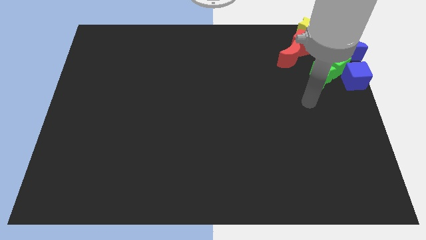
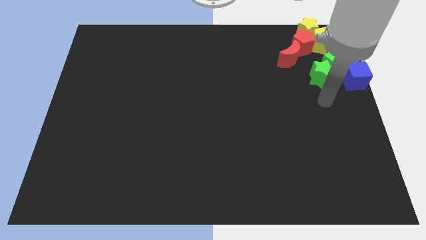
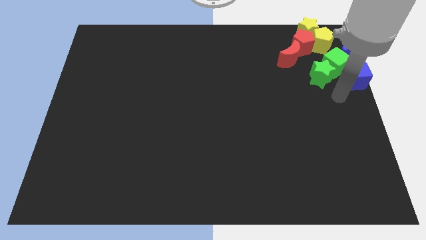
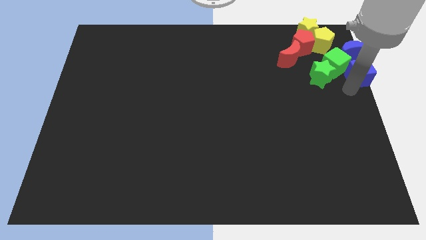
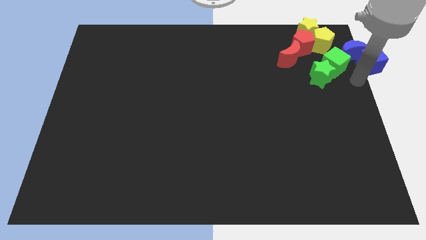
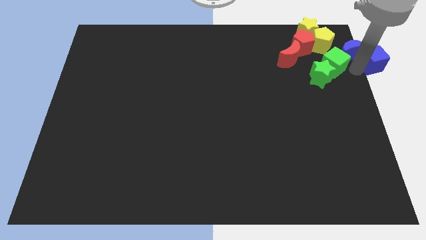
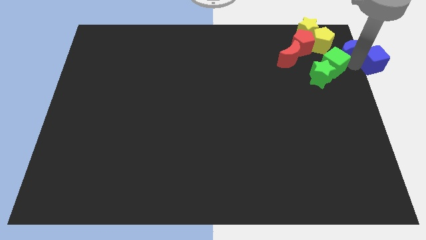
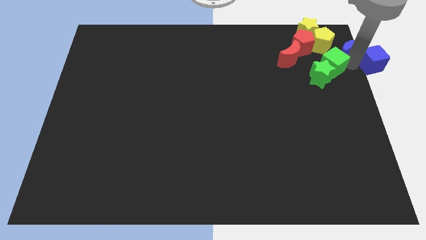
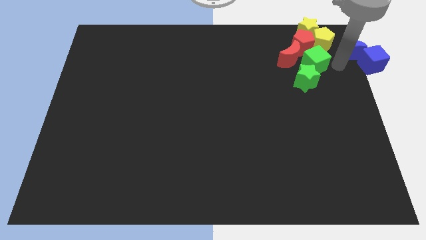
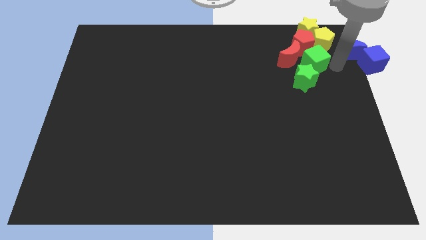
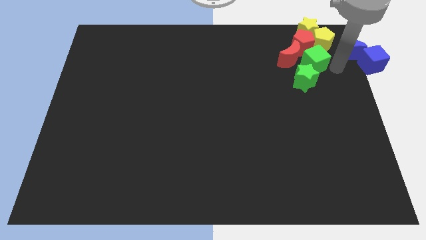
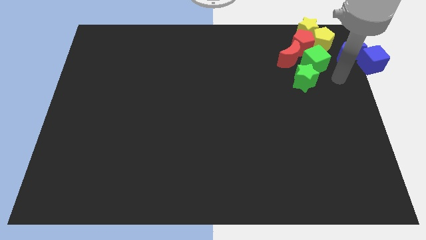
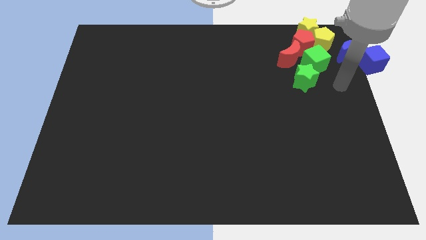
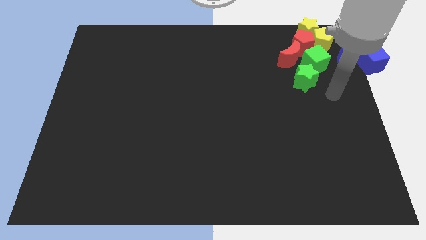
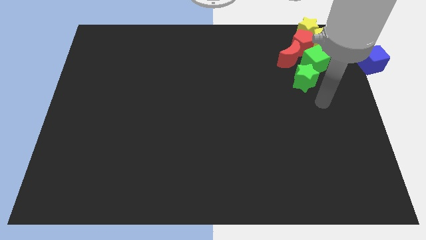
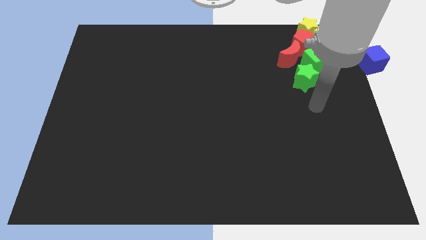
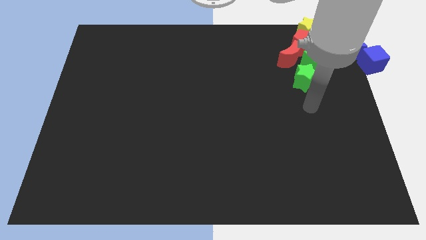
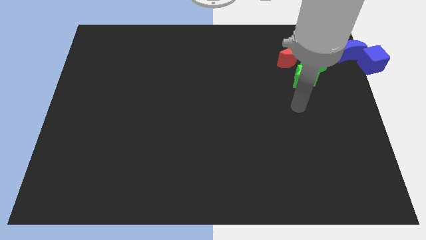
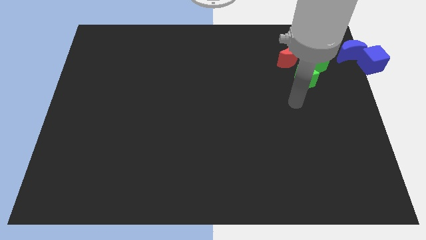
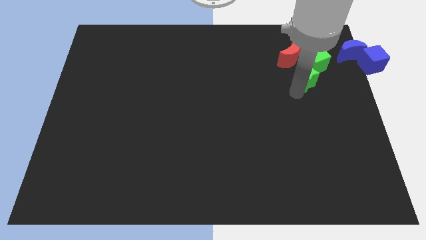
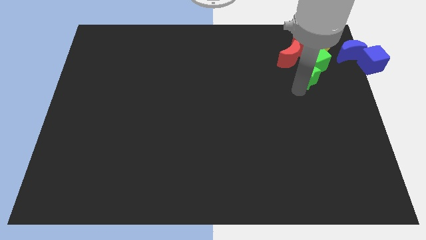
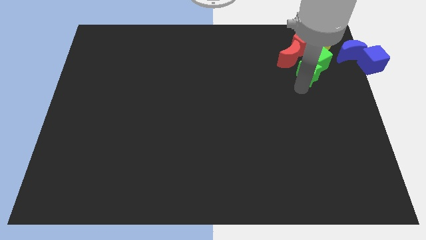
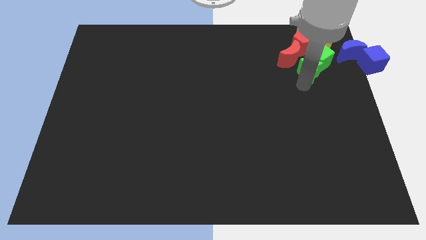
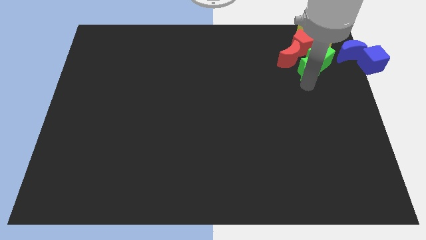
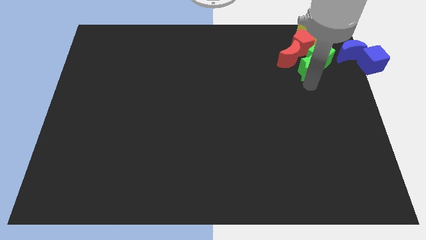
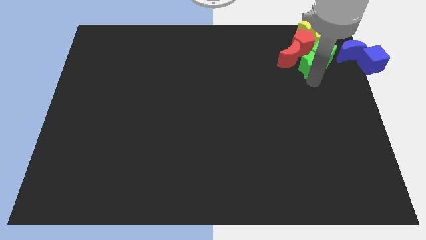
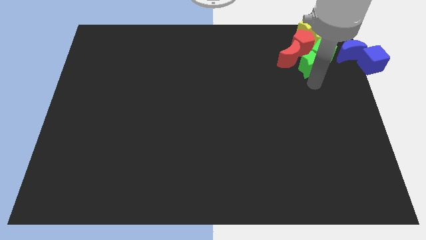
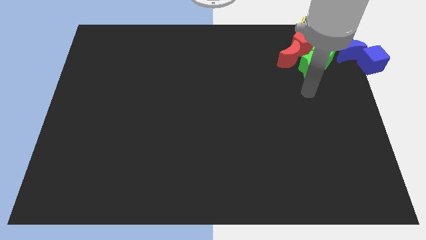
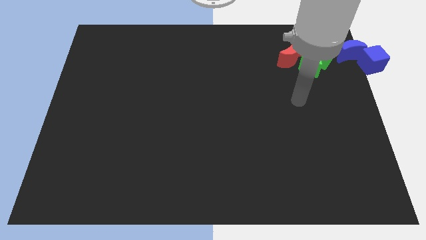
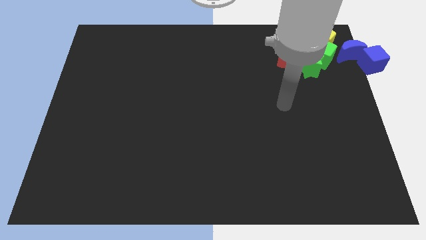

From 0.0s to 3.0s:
push the green star along with green cube into yellow pentagon

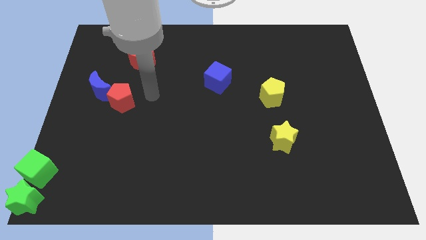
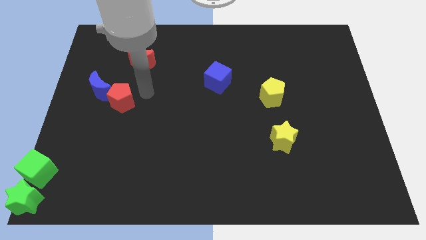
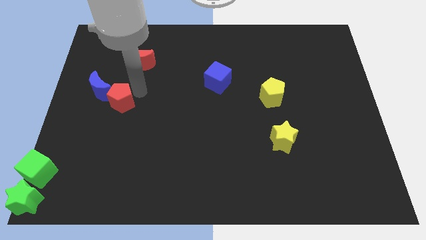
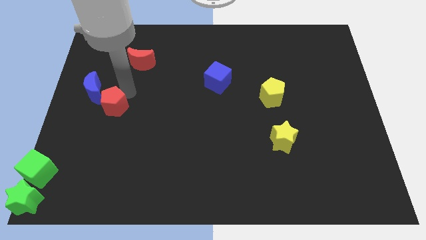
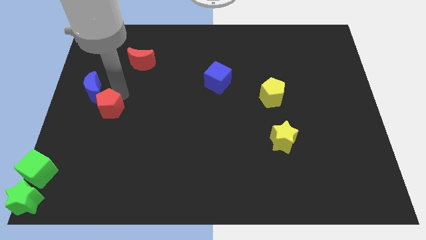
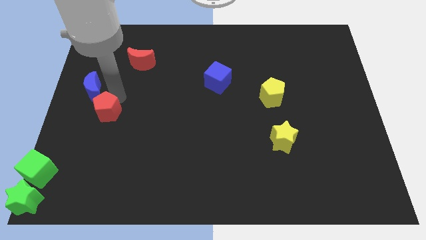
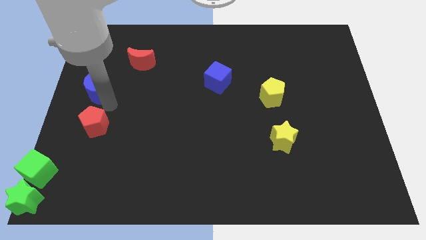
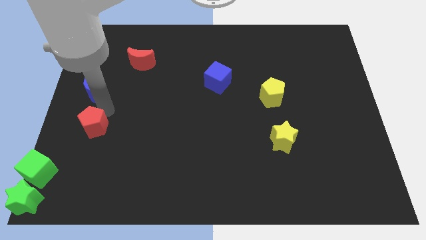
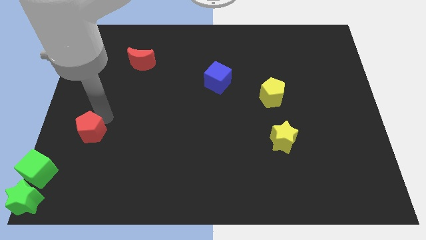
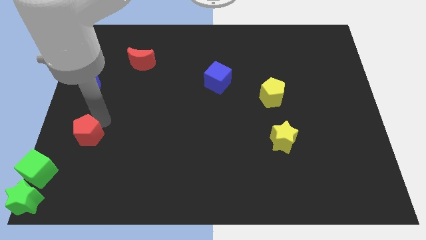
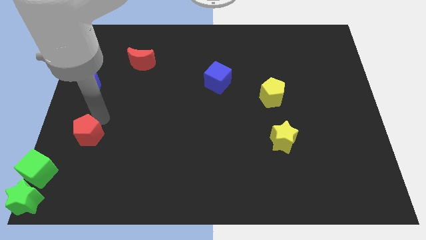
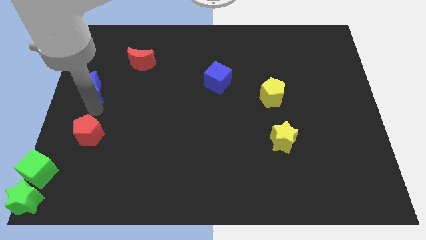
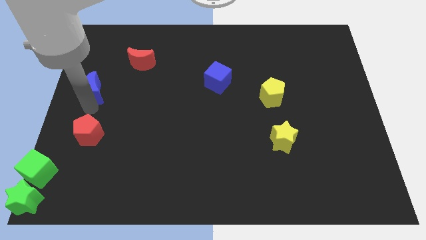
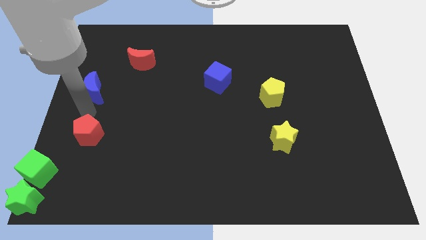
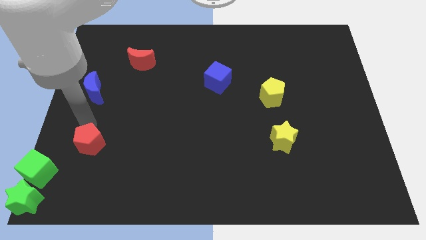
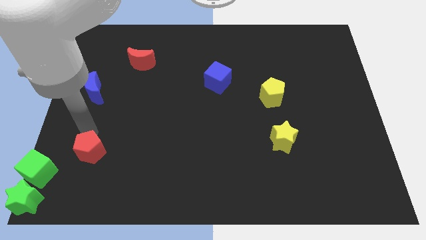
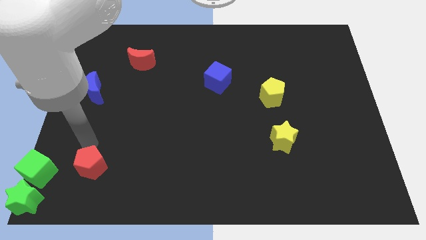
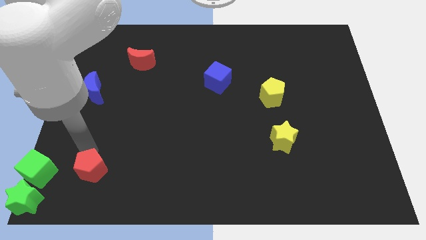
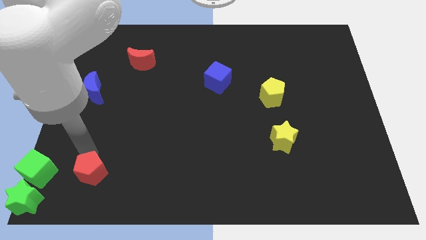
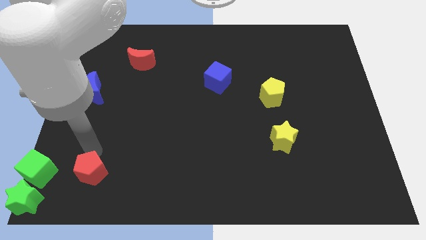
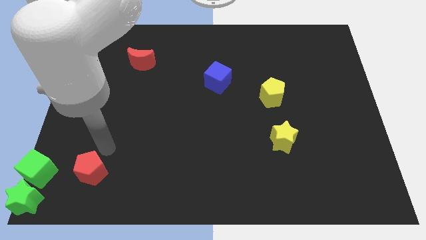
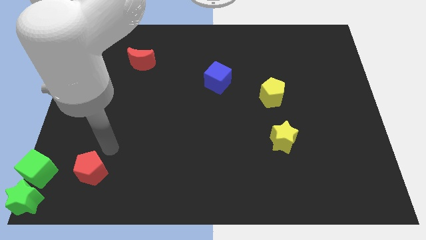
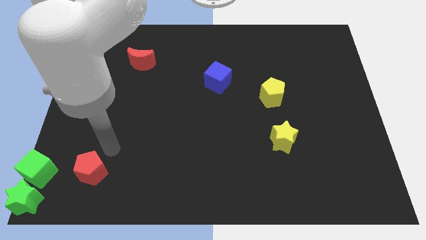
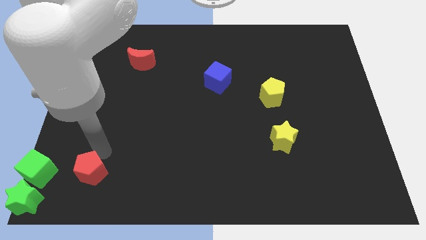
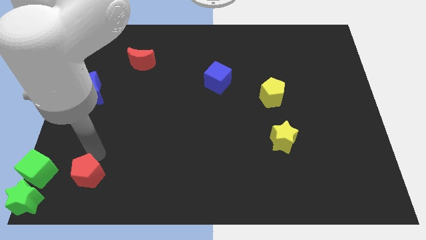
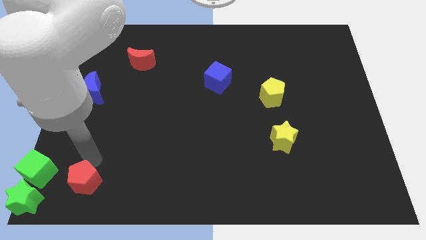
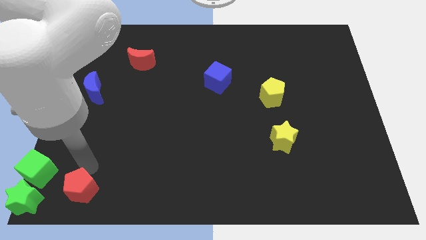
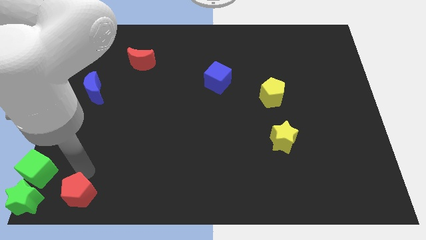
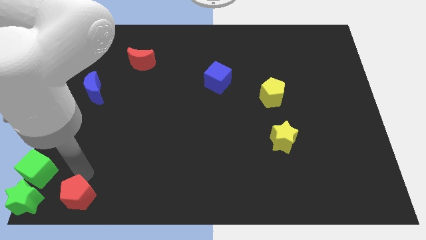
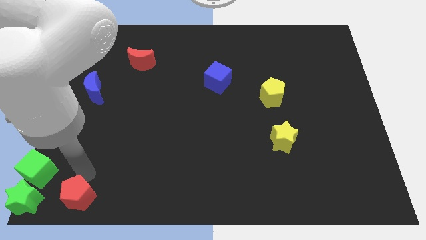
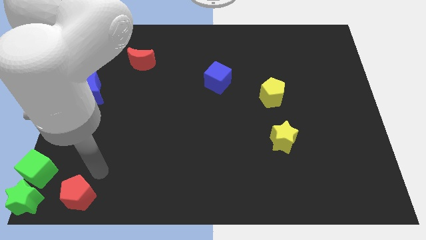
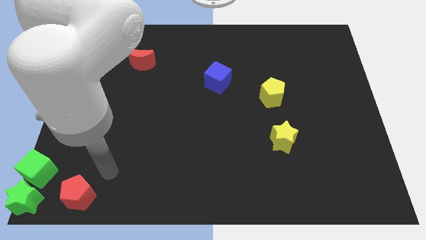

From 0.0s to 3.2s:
place the red pentagon right to the green cube

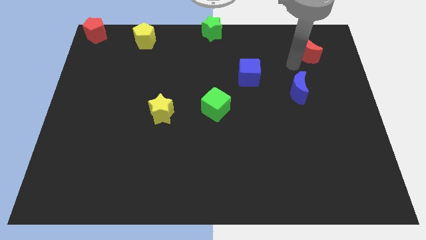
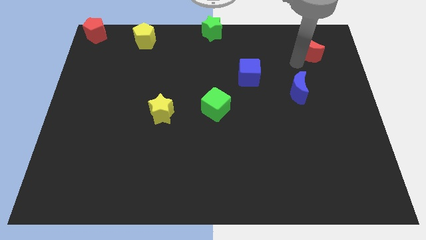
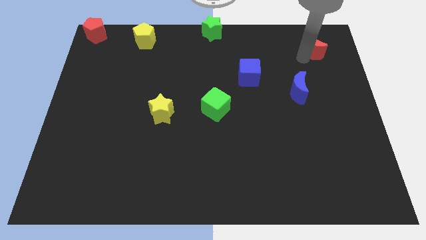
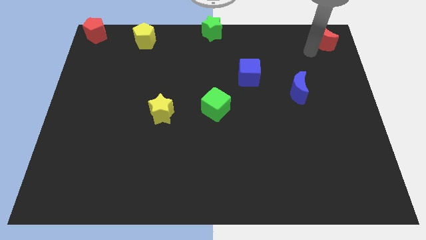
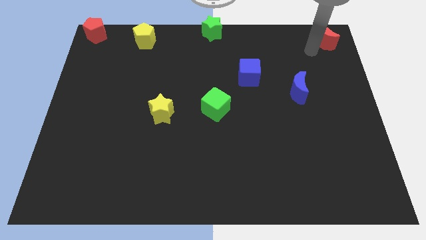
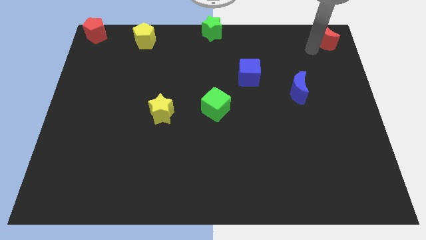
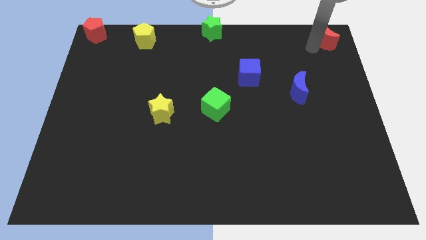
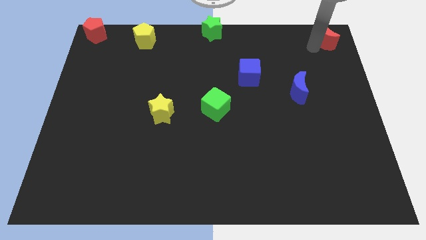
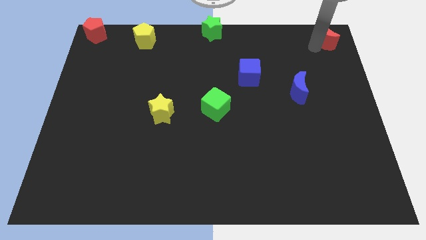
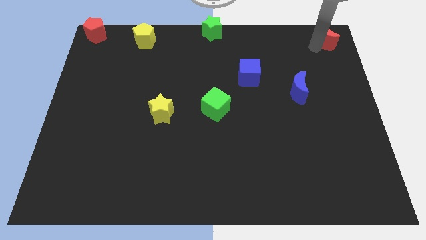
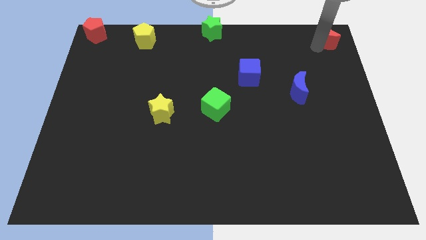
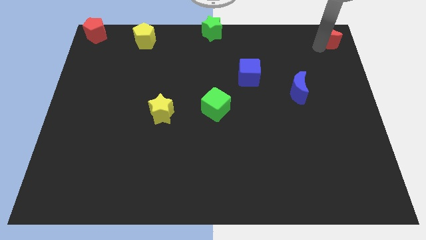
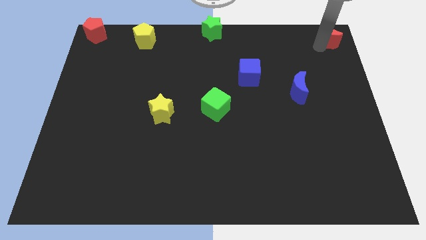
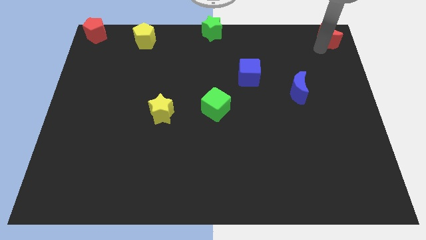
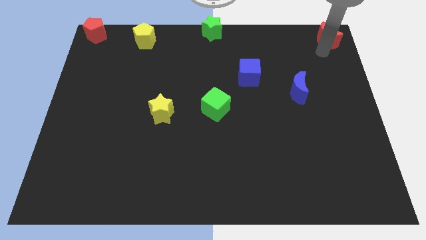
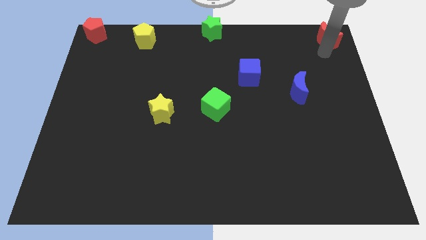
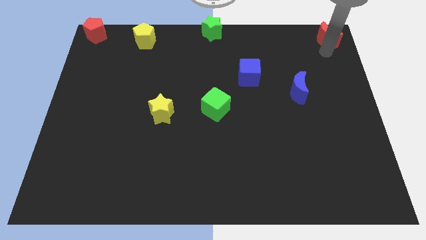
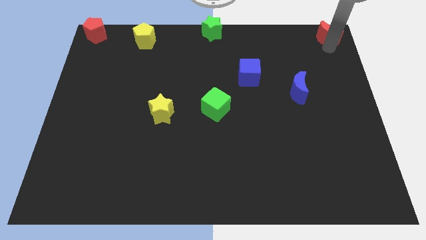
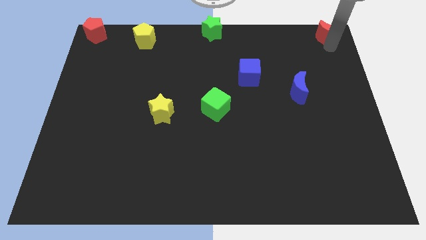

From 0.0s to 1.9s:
move red moon to the top right corner of the board

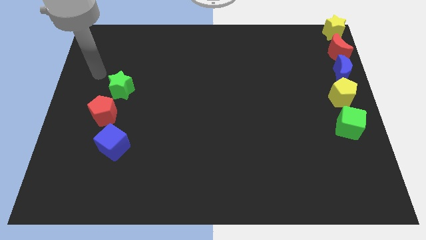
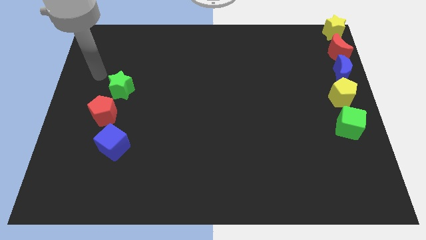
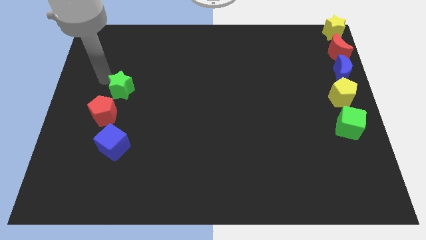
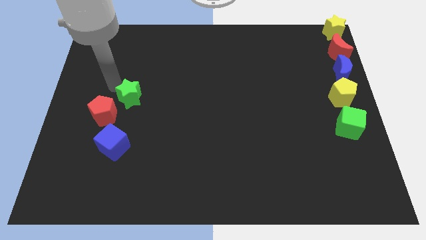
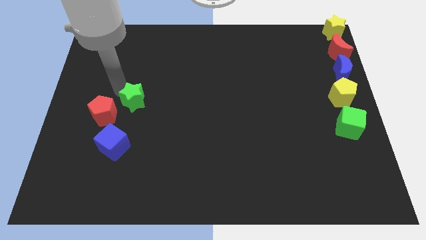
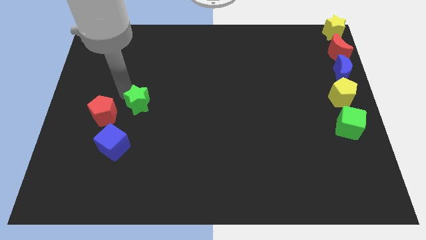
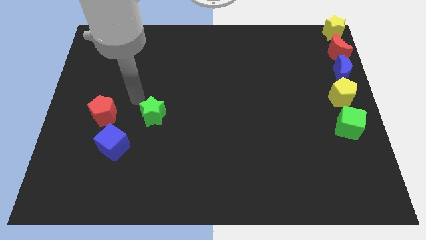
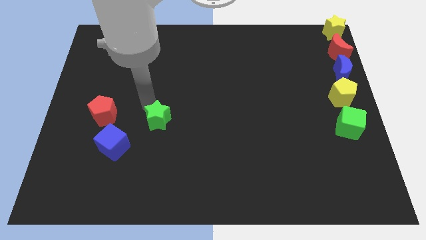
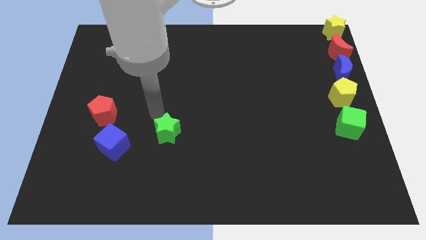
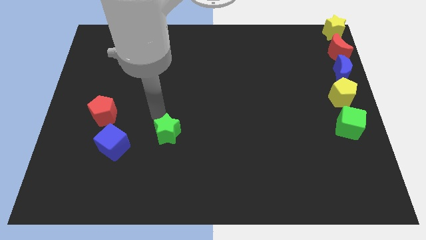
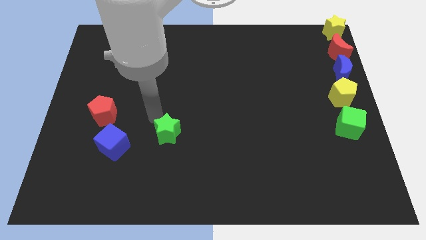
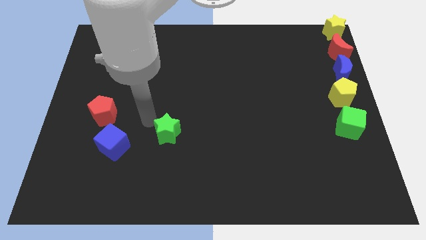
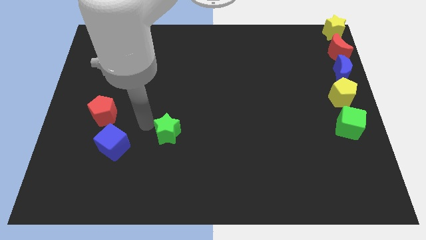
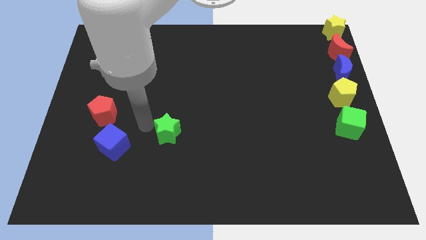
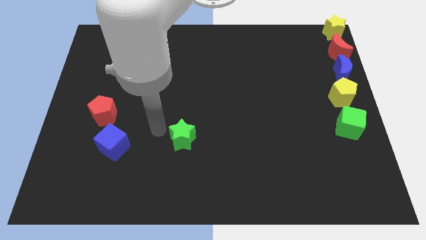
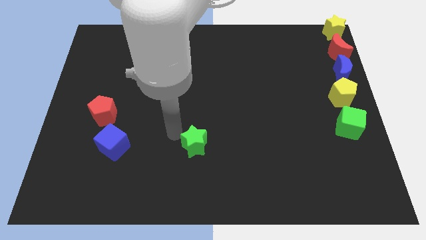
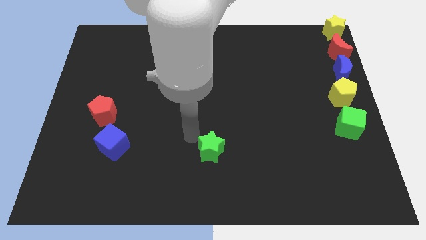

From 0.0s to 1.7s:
push the green star horizontally right to the blue cube
